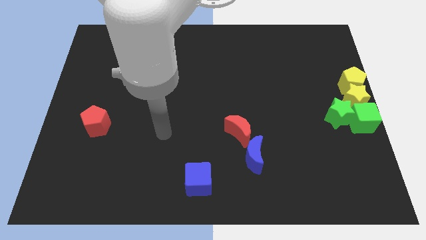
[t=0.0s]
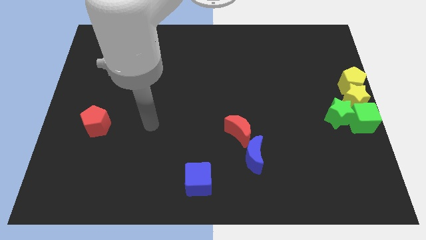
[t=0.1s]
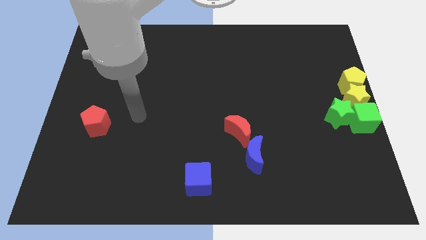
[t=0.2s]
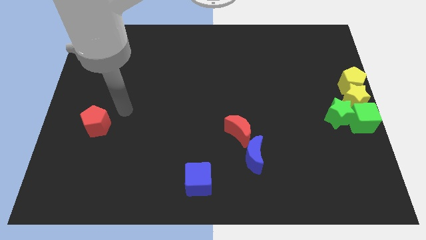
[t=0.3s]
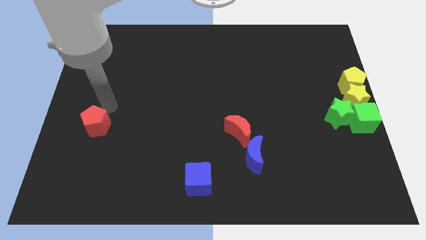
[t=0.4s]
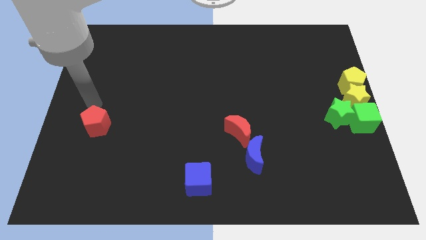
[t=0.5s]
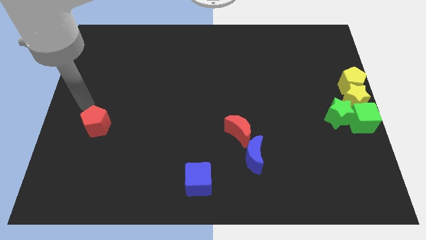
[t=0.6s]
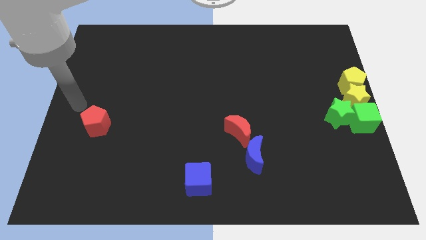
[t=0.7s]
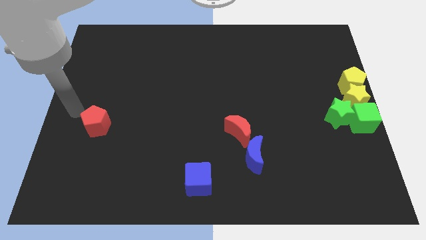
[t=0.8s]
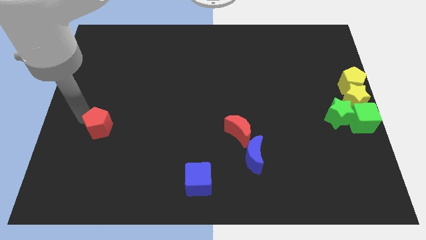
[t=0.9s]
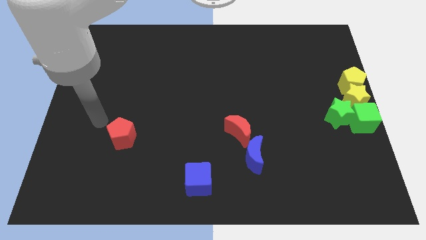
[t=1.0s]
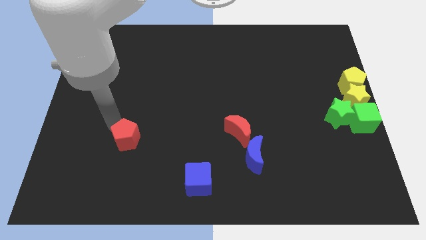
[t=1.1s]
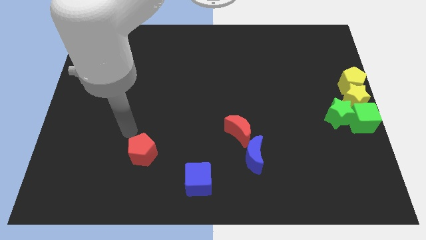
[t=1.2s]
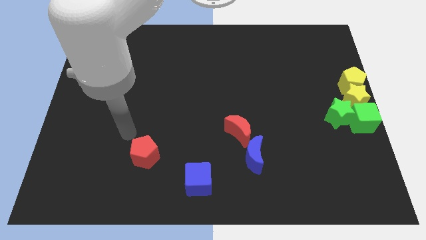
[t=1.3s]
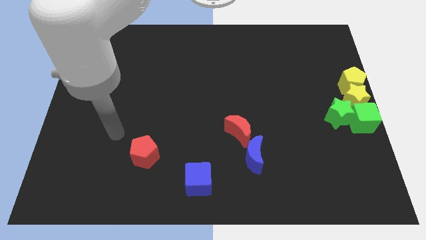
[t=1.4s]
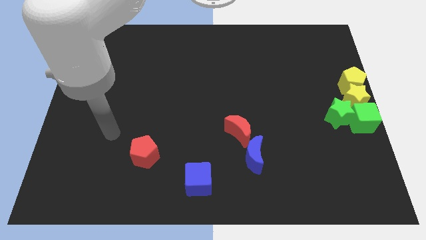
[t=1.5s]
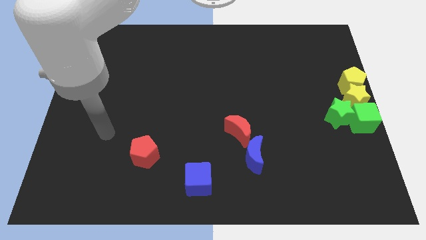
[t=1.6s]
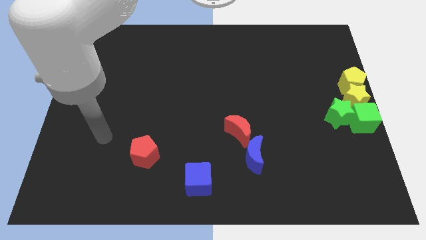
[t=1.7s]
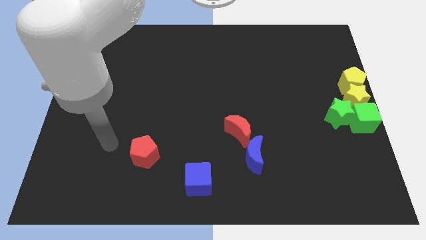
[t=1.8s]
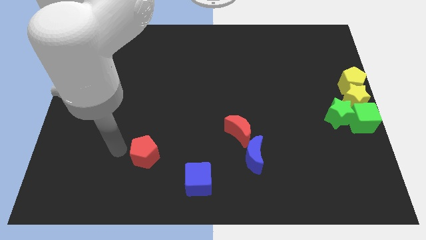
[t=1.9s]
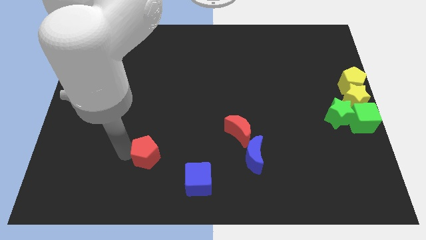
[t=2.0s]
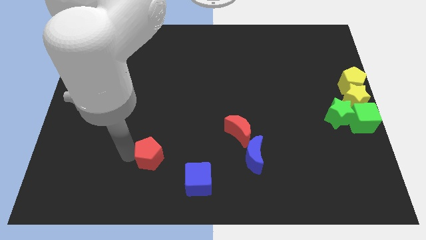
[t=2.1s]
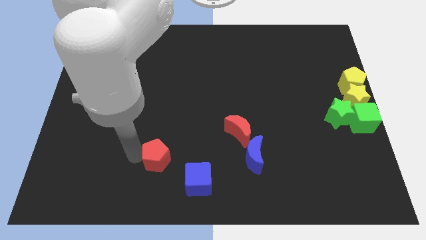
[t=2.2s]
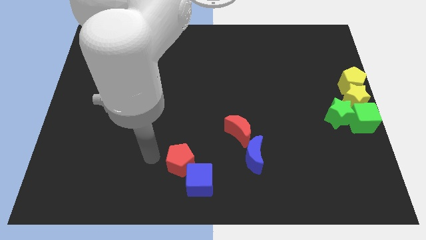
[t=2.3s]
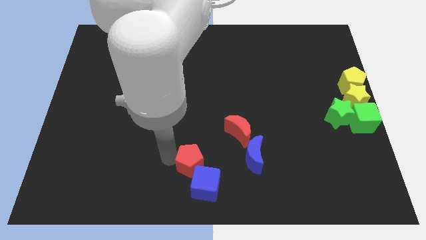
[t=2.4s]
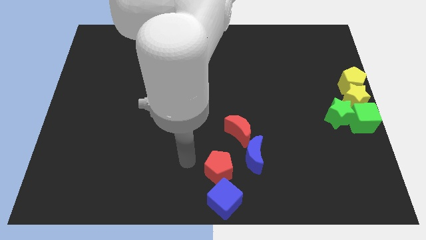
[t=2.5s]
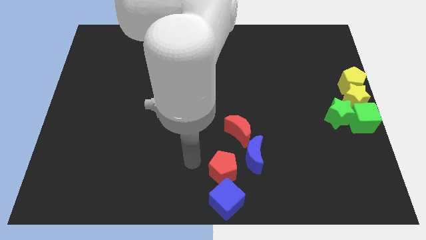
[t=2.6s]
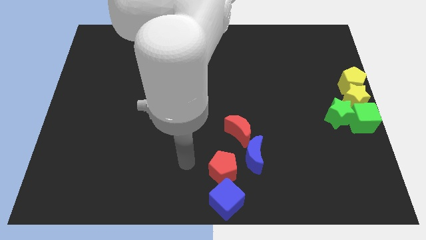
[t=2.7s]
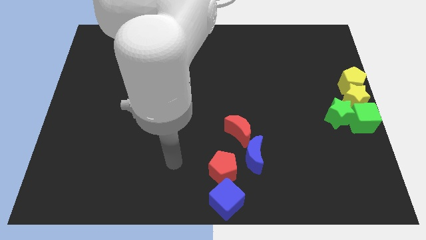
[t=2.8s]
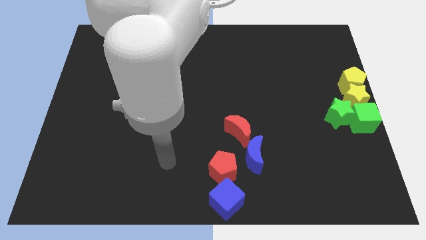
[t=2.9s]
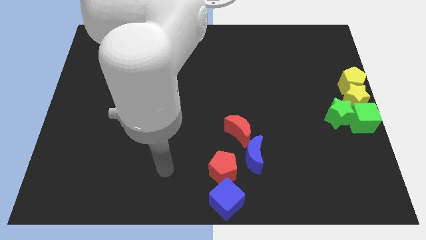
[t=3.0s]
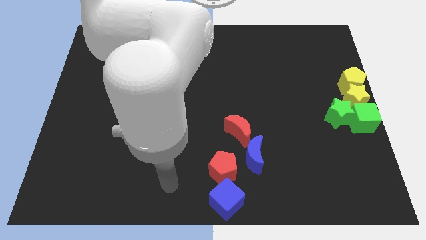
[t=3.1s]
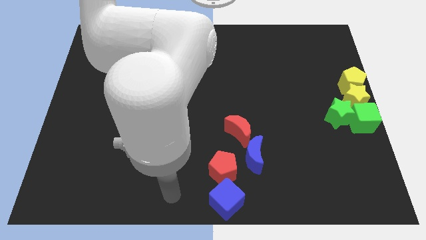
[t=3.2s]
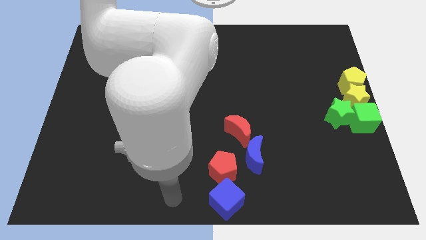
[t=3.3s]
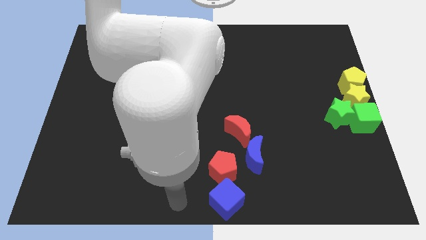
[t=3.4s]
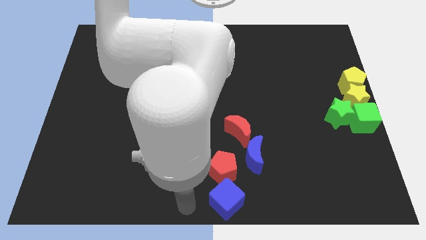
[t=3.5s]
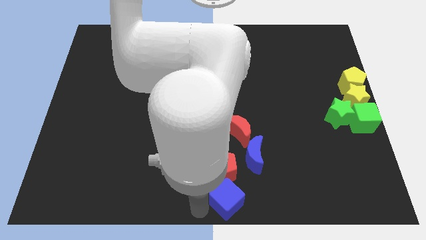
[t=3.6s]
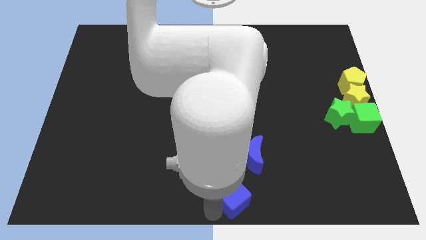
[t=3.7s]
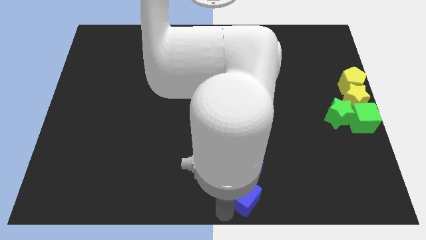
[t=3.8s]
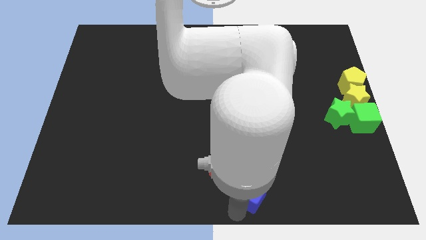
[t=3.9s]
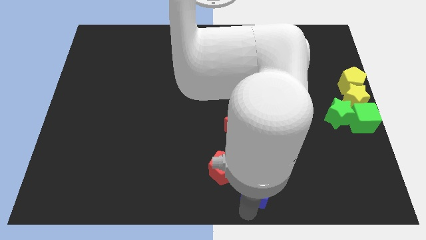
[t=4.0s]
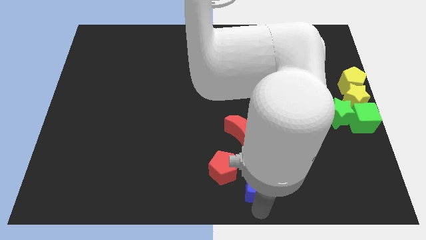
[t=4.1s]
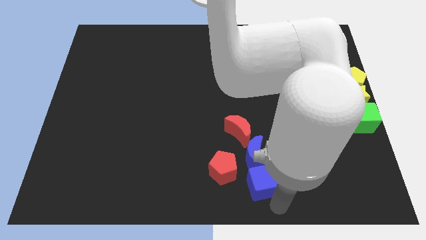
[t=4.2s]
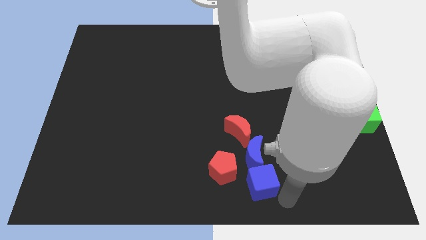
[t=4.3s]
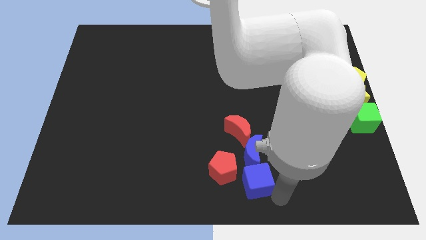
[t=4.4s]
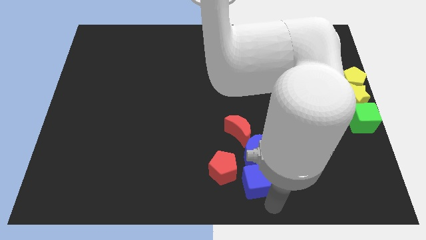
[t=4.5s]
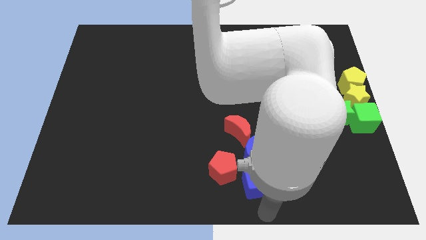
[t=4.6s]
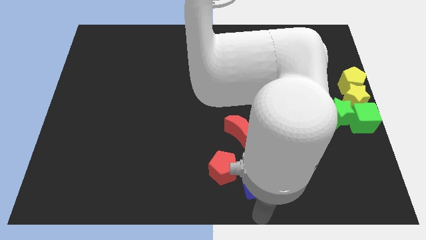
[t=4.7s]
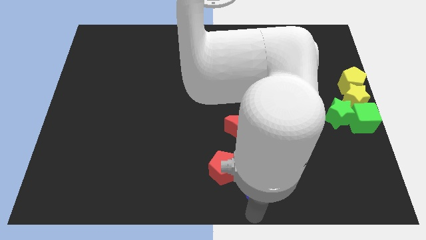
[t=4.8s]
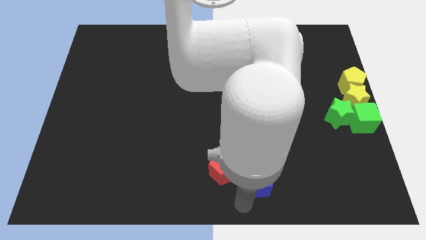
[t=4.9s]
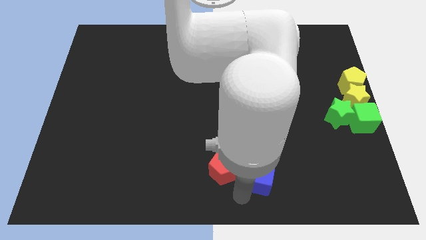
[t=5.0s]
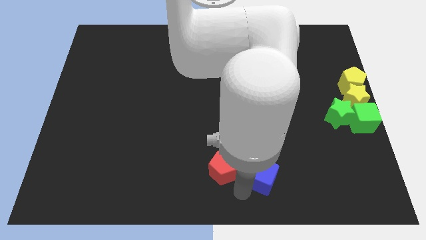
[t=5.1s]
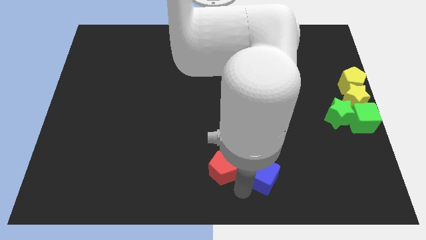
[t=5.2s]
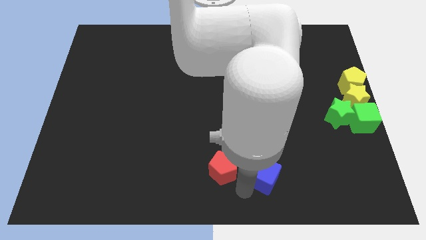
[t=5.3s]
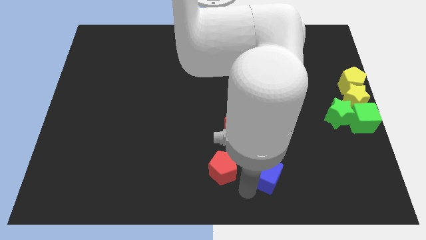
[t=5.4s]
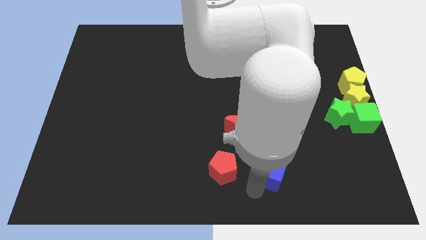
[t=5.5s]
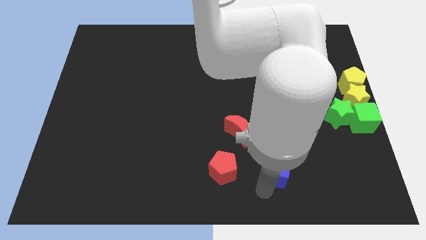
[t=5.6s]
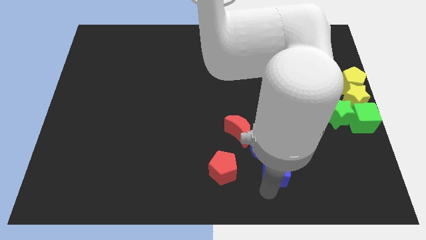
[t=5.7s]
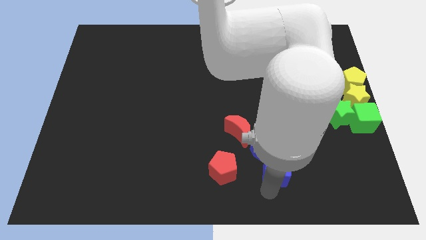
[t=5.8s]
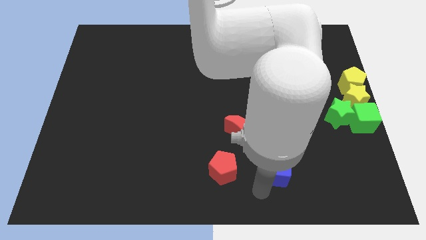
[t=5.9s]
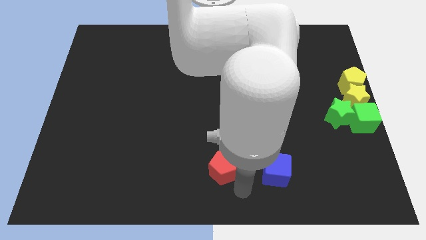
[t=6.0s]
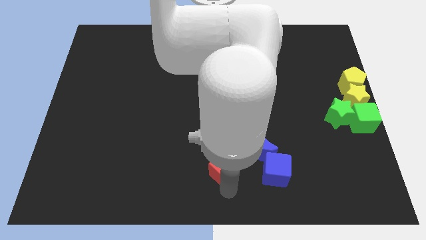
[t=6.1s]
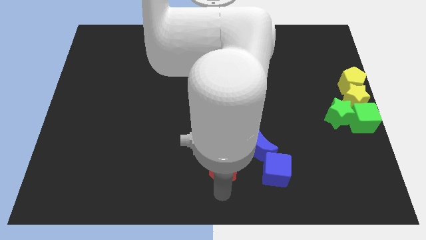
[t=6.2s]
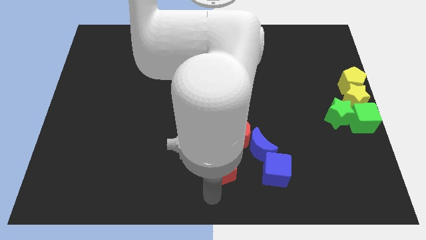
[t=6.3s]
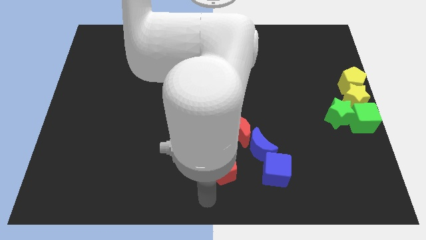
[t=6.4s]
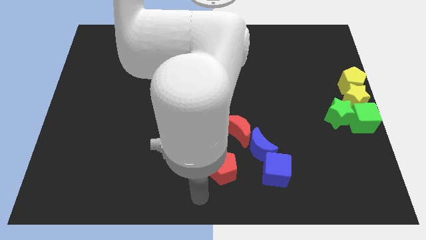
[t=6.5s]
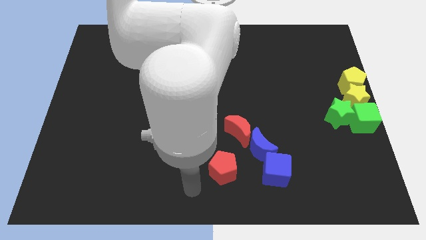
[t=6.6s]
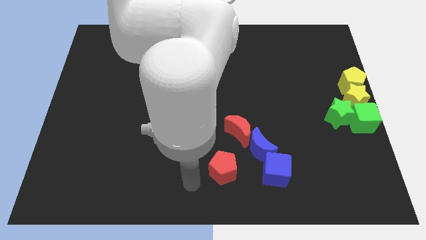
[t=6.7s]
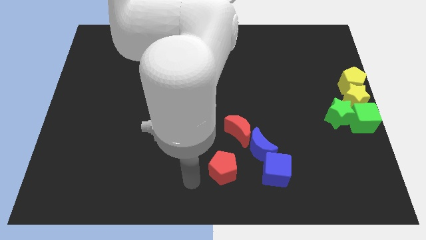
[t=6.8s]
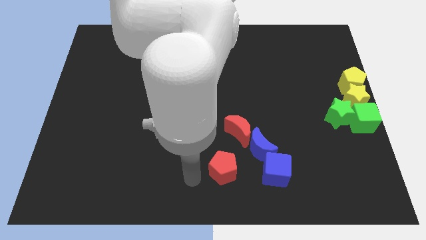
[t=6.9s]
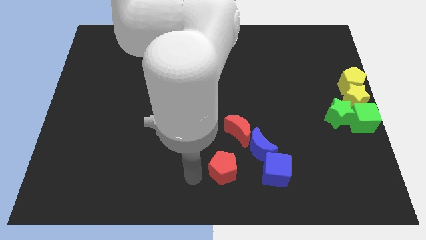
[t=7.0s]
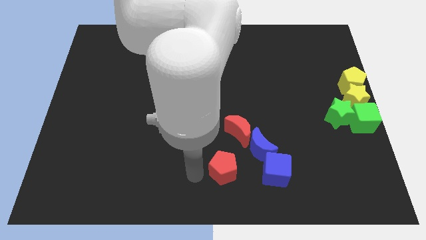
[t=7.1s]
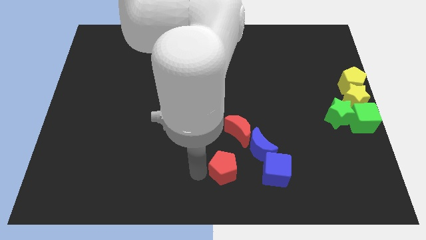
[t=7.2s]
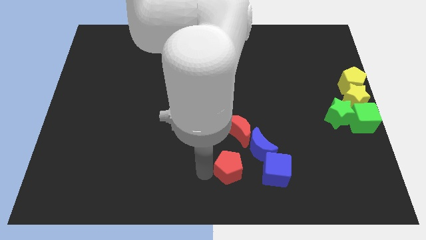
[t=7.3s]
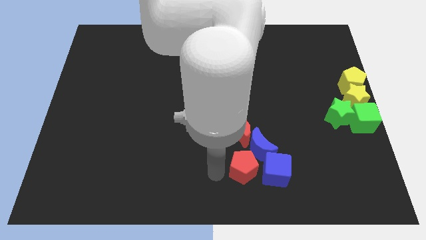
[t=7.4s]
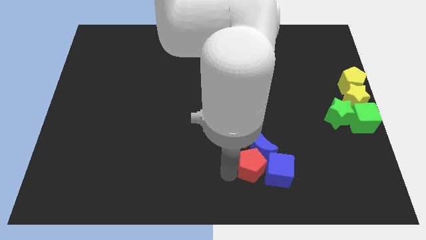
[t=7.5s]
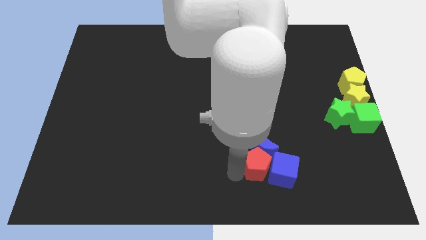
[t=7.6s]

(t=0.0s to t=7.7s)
group up the blue things with the red objects

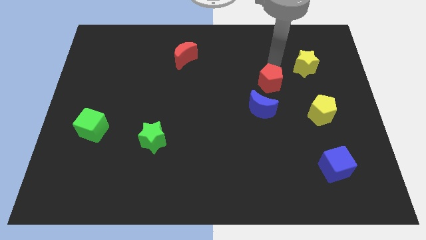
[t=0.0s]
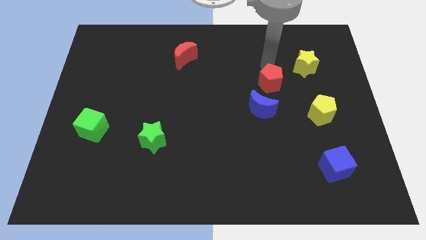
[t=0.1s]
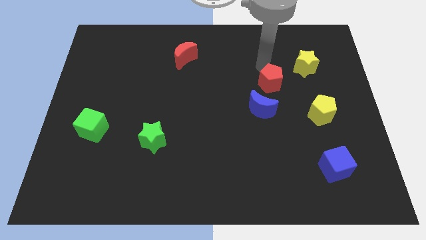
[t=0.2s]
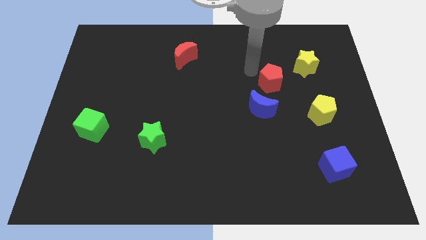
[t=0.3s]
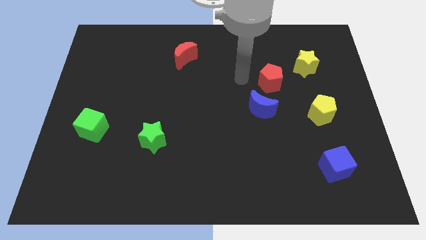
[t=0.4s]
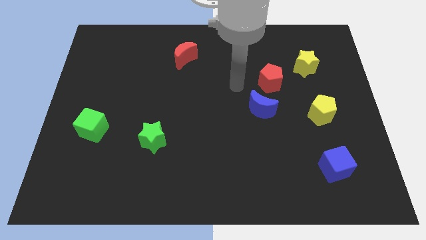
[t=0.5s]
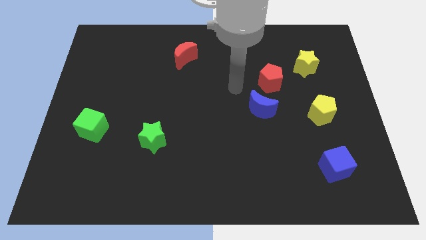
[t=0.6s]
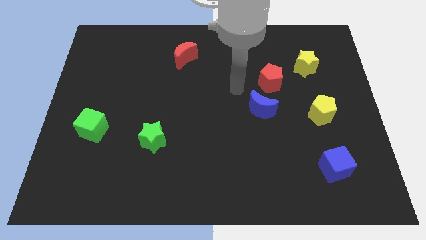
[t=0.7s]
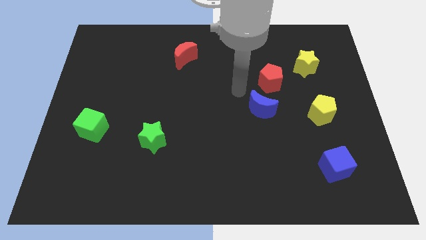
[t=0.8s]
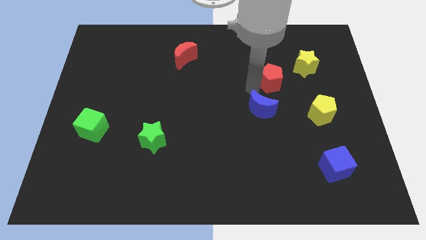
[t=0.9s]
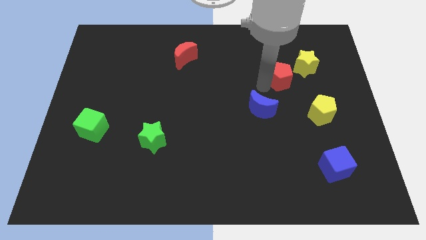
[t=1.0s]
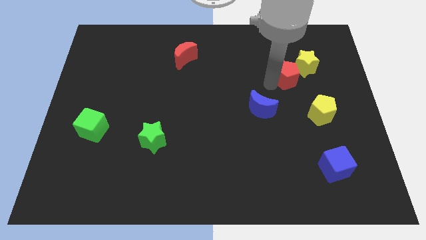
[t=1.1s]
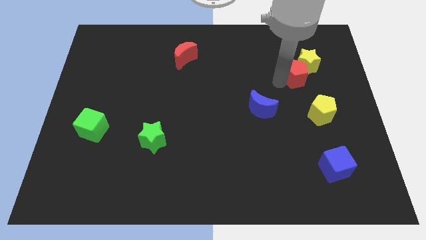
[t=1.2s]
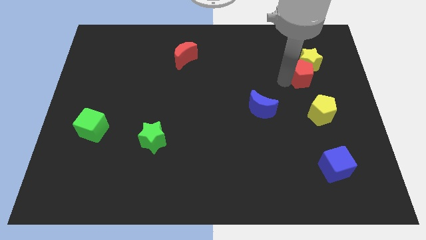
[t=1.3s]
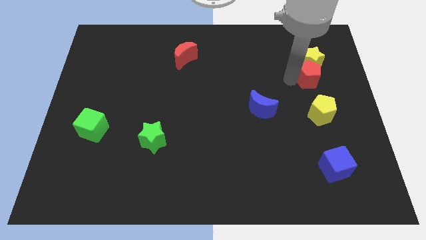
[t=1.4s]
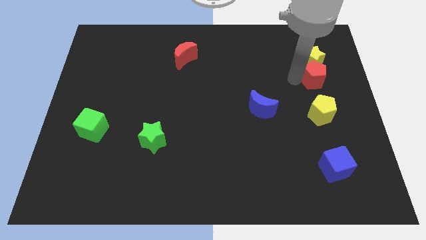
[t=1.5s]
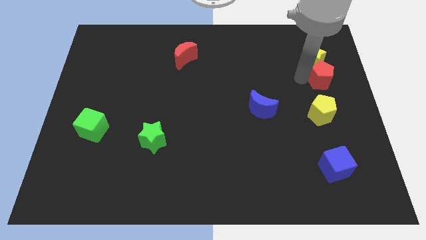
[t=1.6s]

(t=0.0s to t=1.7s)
place the red pentagon below the yellow star
